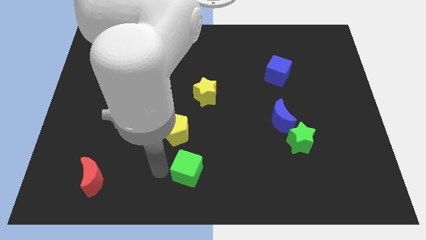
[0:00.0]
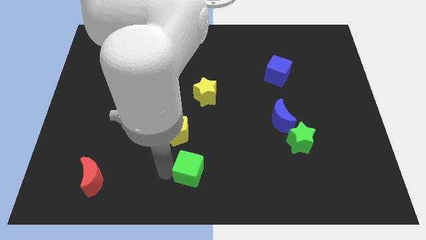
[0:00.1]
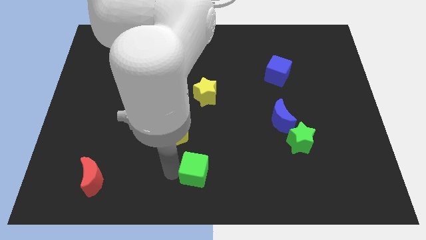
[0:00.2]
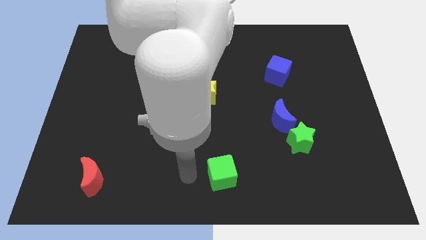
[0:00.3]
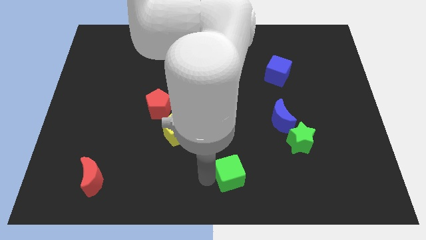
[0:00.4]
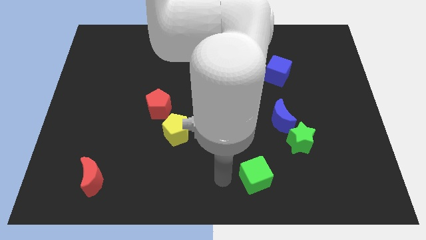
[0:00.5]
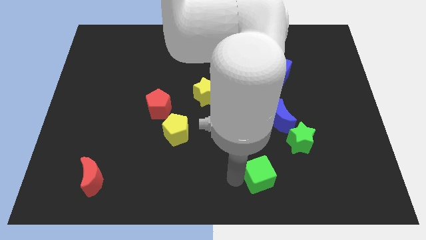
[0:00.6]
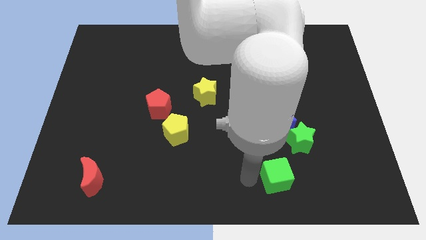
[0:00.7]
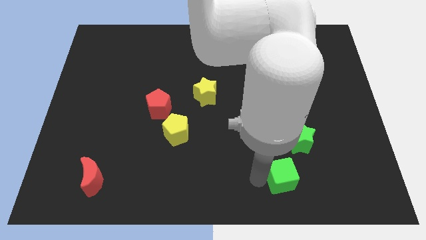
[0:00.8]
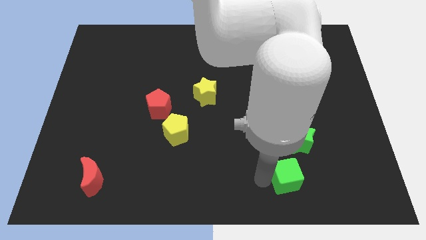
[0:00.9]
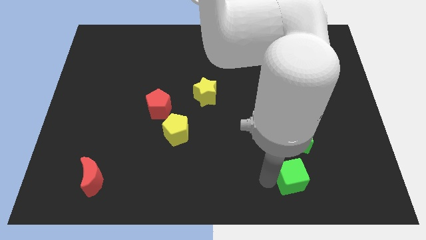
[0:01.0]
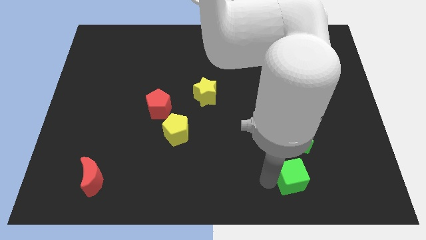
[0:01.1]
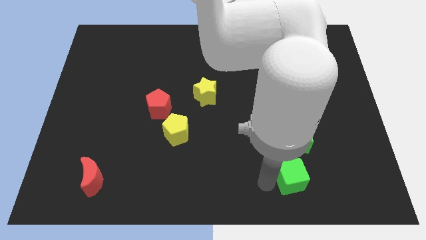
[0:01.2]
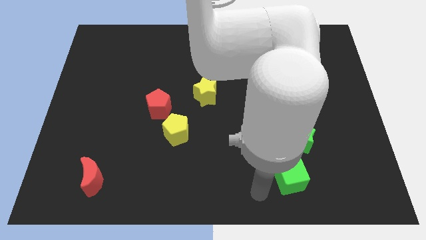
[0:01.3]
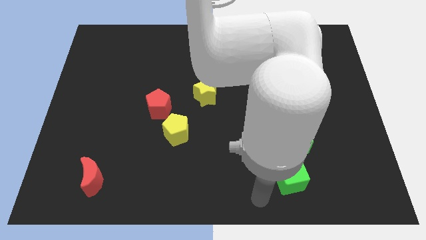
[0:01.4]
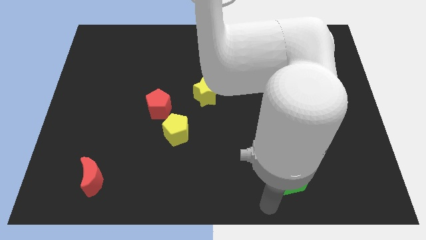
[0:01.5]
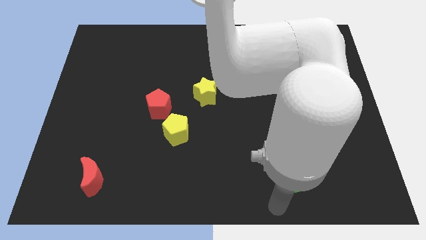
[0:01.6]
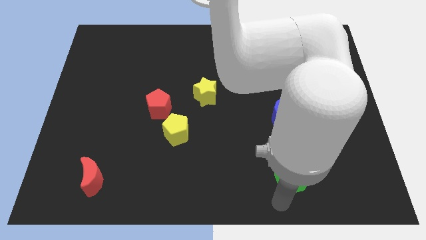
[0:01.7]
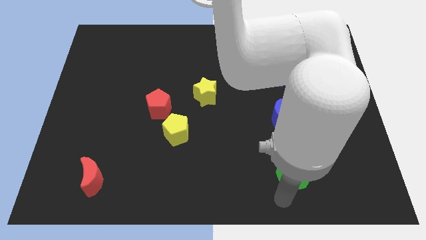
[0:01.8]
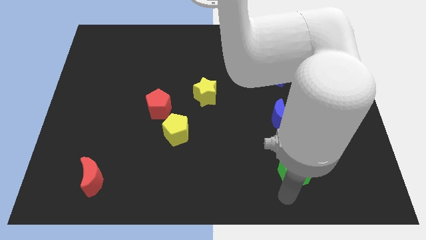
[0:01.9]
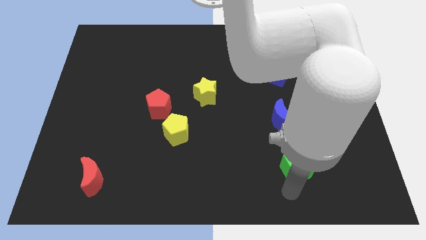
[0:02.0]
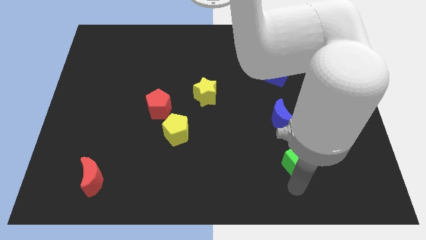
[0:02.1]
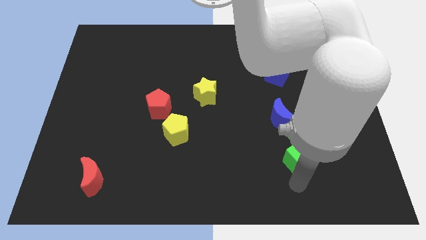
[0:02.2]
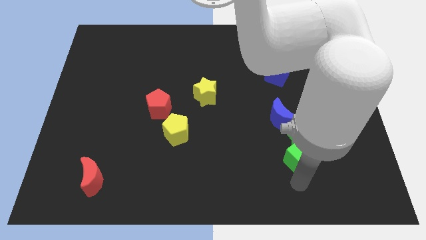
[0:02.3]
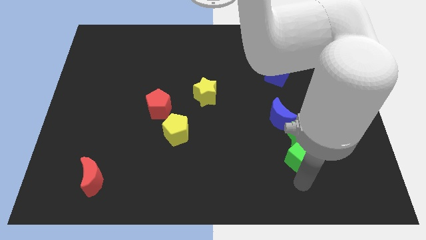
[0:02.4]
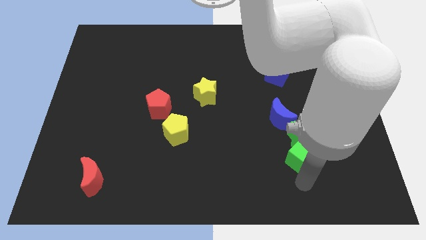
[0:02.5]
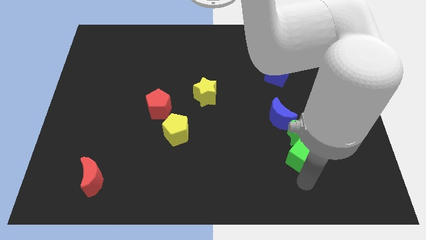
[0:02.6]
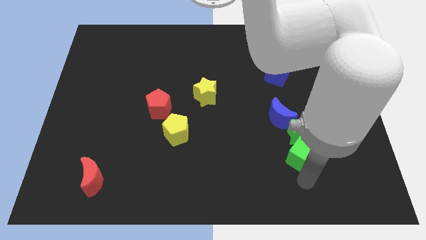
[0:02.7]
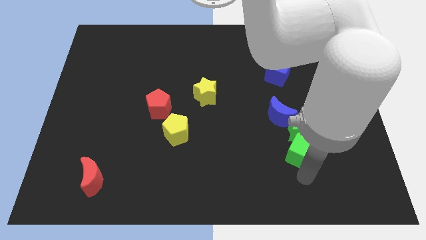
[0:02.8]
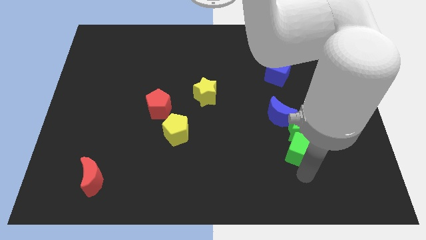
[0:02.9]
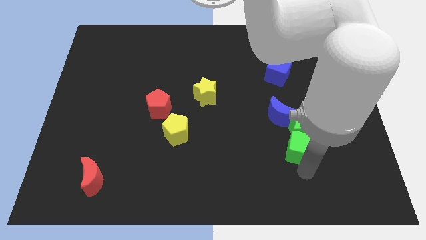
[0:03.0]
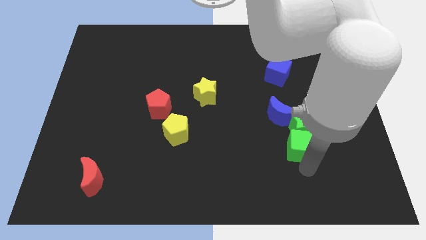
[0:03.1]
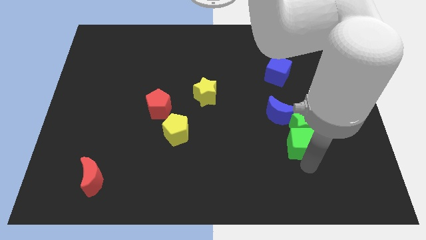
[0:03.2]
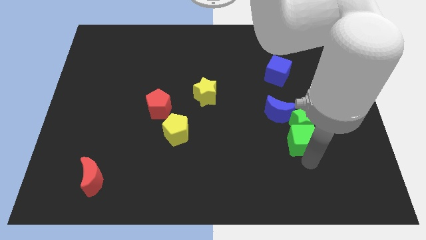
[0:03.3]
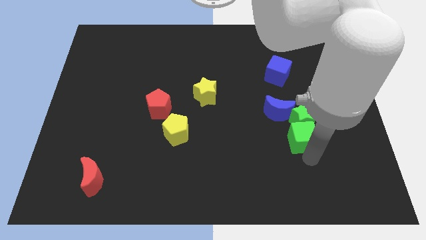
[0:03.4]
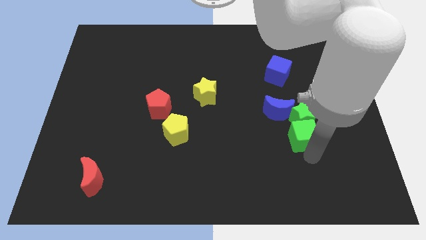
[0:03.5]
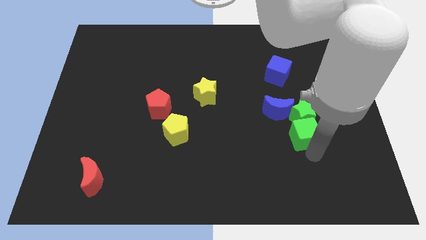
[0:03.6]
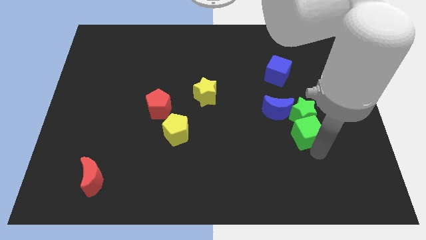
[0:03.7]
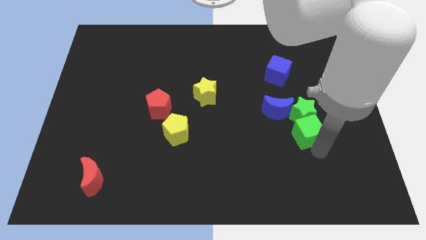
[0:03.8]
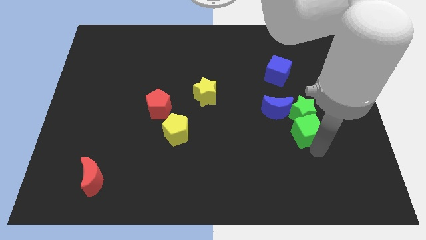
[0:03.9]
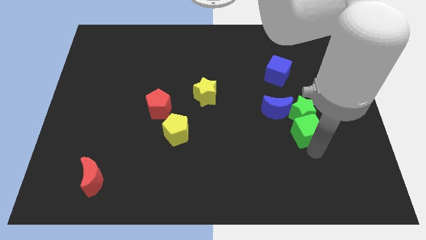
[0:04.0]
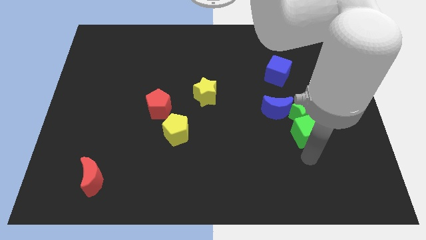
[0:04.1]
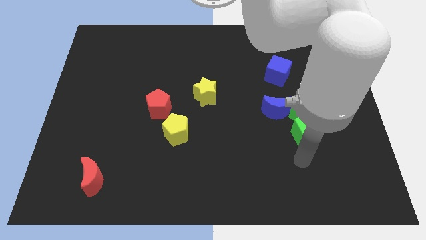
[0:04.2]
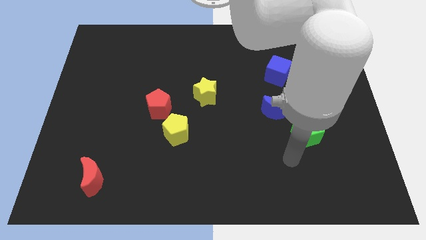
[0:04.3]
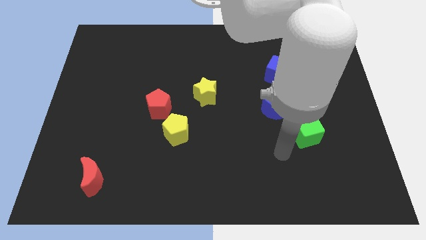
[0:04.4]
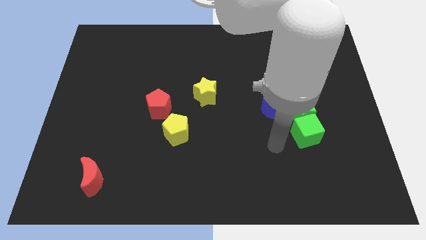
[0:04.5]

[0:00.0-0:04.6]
push the green star upwards slightly with the green cube

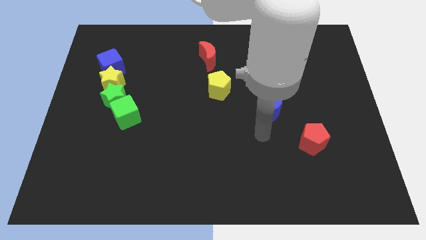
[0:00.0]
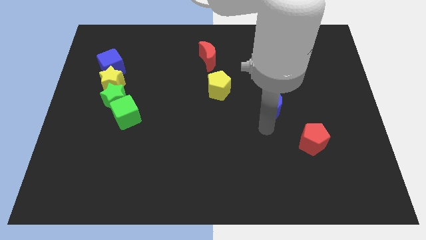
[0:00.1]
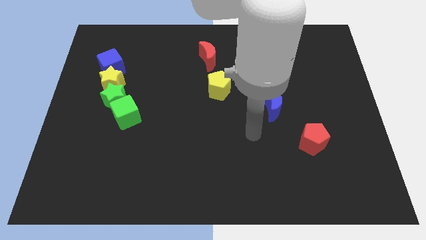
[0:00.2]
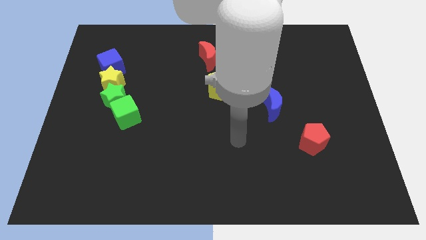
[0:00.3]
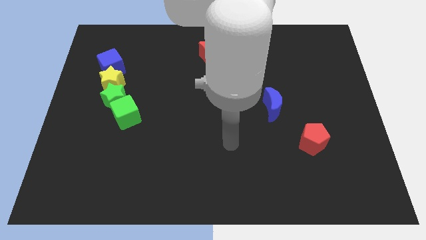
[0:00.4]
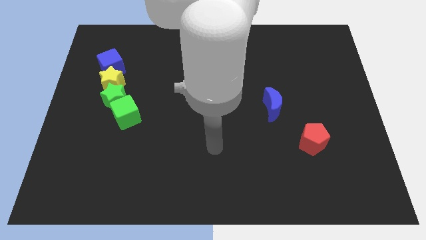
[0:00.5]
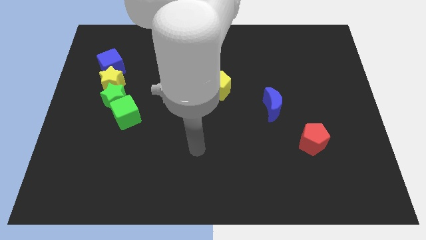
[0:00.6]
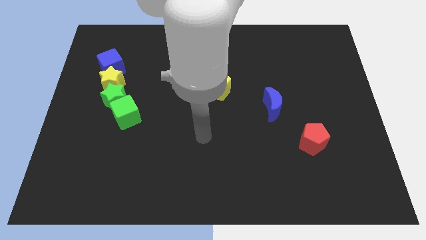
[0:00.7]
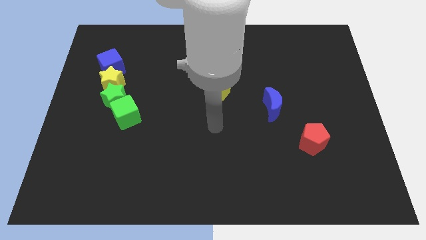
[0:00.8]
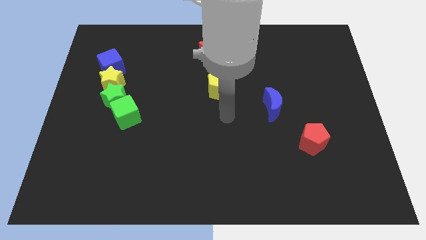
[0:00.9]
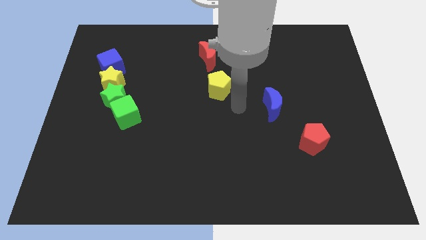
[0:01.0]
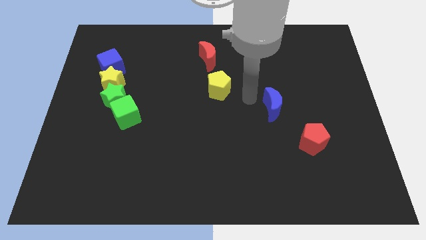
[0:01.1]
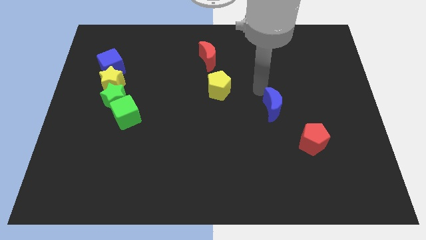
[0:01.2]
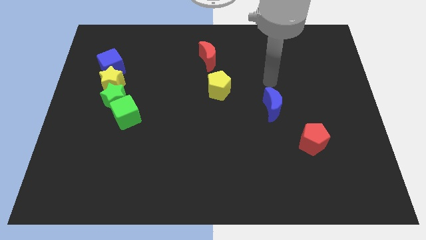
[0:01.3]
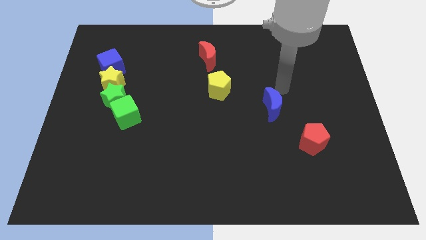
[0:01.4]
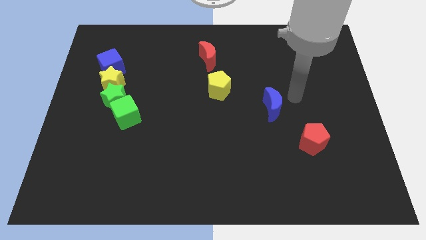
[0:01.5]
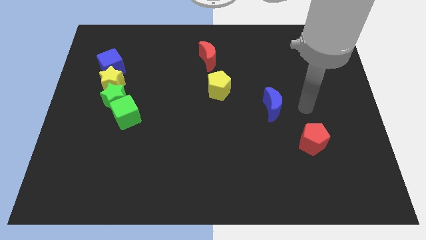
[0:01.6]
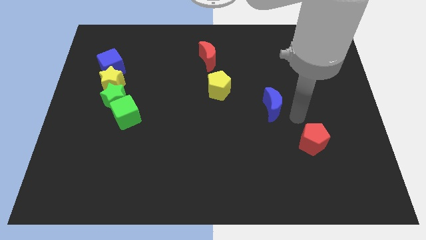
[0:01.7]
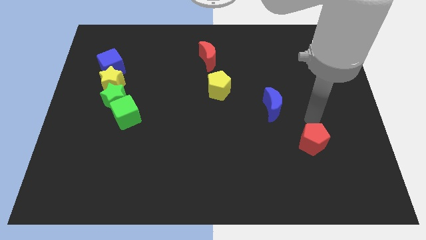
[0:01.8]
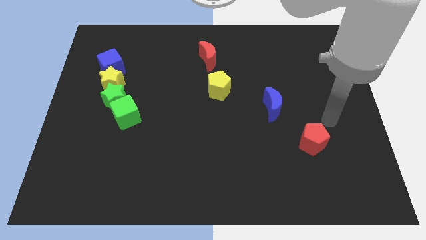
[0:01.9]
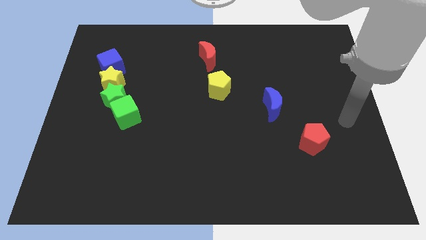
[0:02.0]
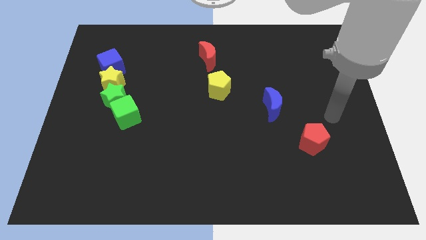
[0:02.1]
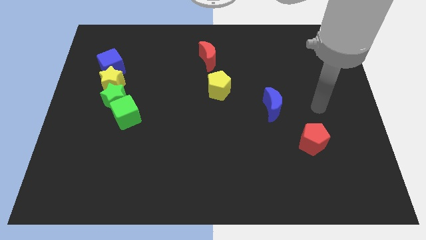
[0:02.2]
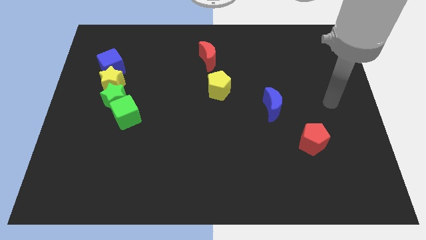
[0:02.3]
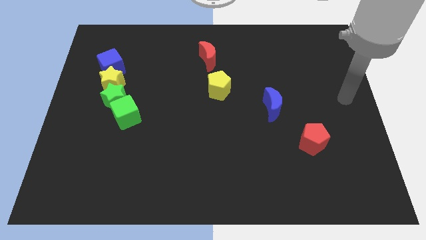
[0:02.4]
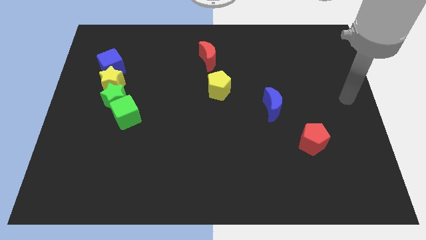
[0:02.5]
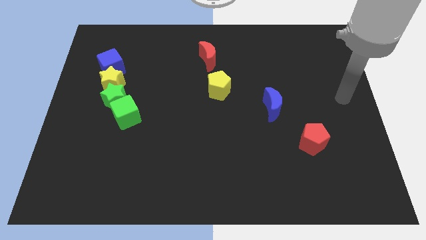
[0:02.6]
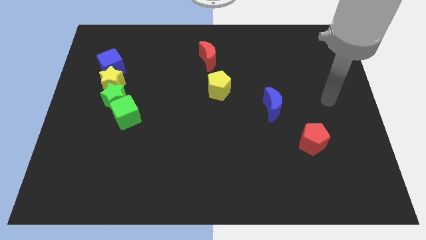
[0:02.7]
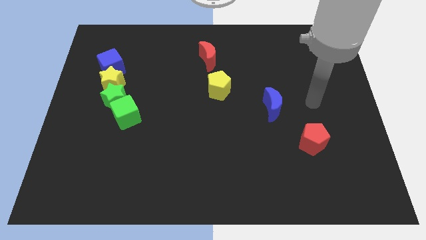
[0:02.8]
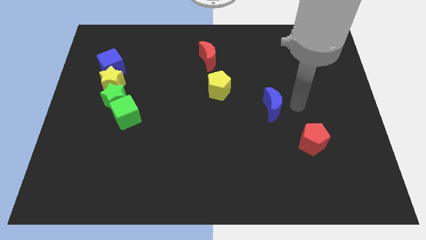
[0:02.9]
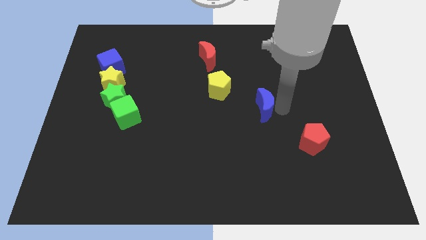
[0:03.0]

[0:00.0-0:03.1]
touch the right side of the blue crescent

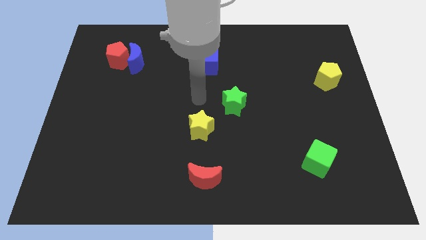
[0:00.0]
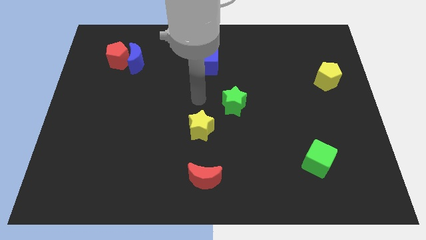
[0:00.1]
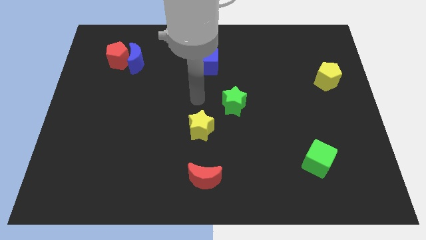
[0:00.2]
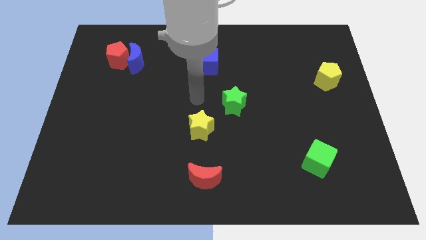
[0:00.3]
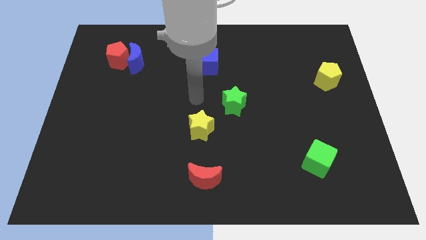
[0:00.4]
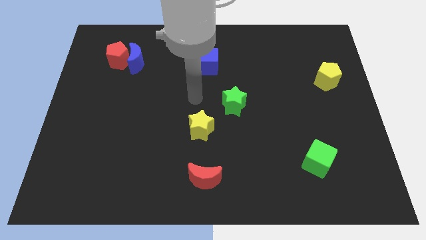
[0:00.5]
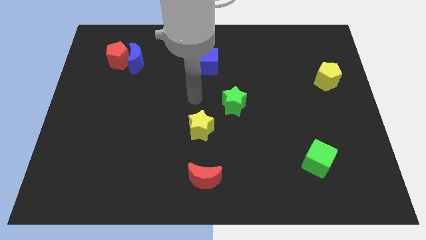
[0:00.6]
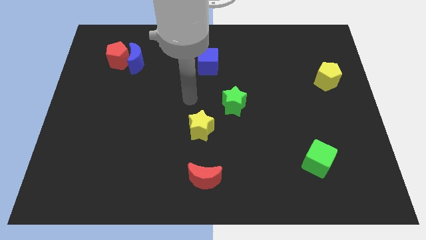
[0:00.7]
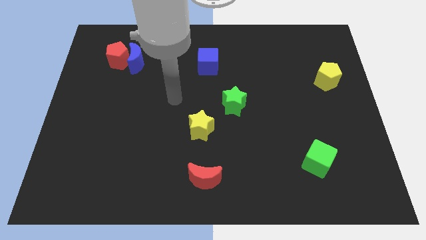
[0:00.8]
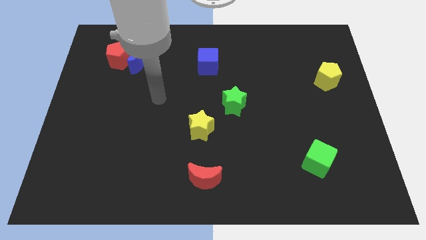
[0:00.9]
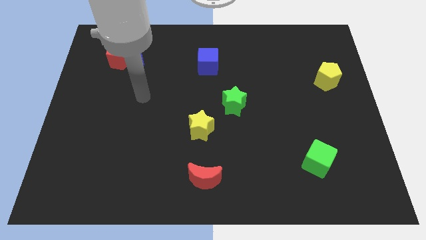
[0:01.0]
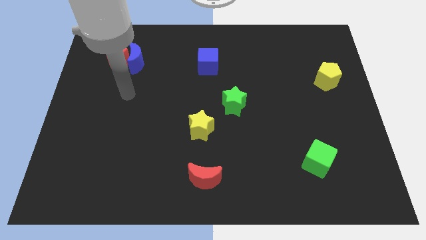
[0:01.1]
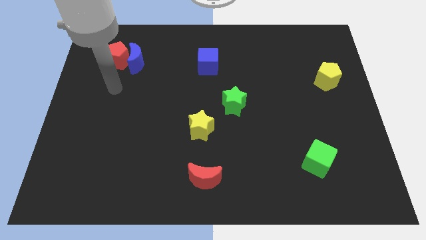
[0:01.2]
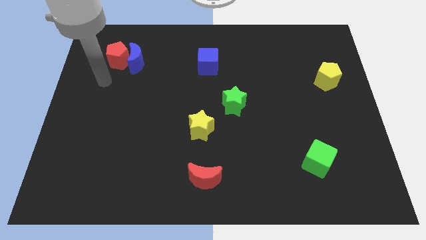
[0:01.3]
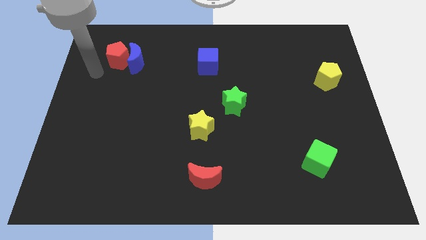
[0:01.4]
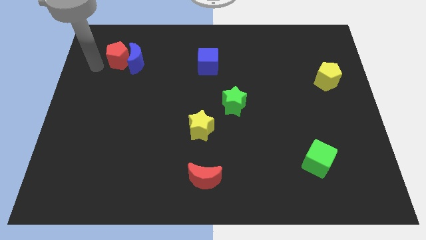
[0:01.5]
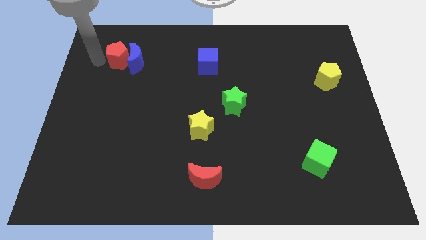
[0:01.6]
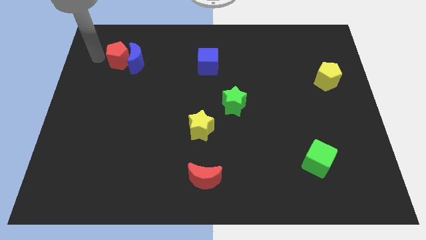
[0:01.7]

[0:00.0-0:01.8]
point your arm towards the bottom left side of the red pentagon
